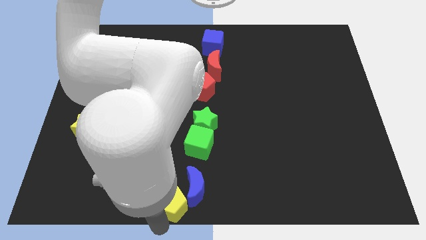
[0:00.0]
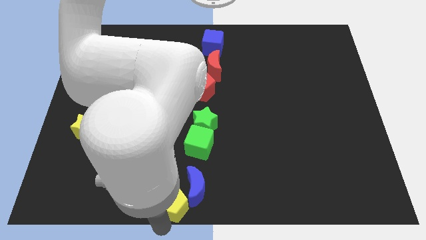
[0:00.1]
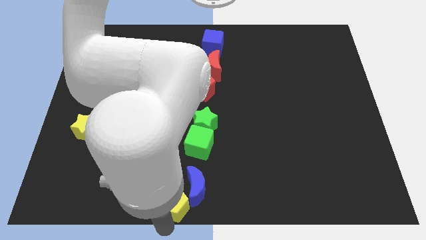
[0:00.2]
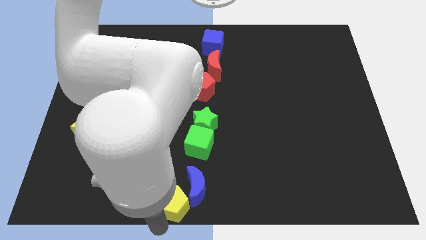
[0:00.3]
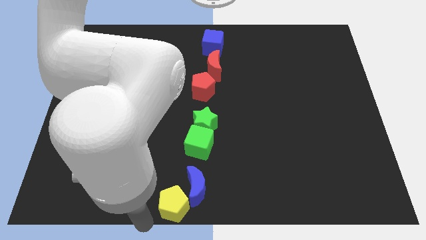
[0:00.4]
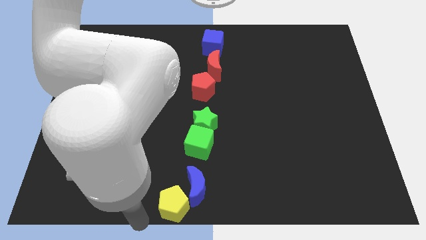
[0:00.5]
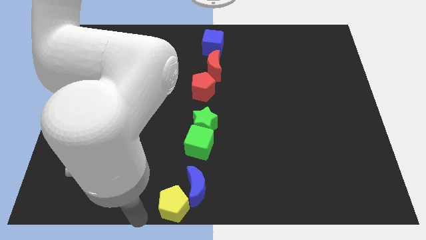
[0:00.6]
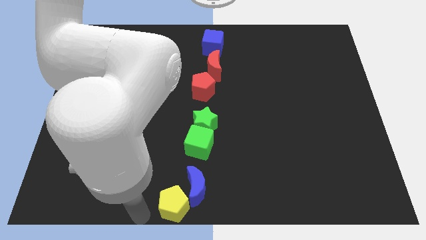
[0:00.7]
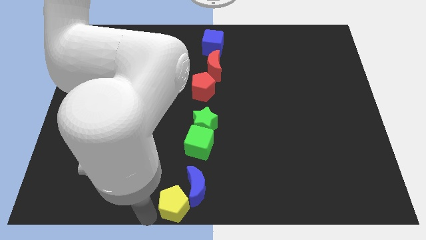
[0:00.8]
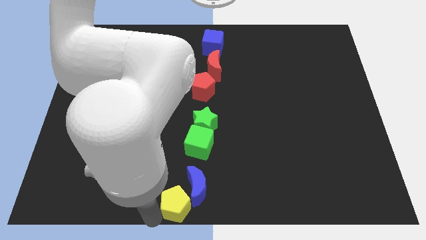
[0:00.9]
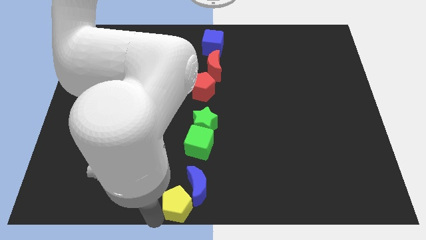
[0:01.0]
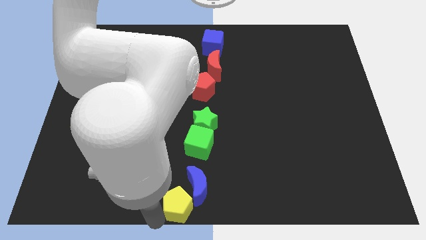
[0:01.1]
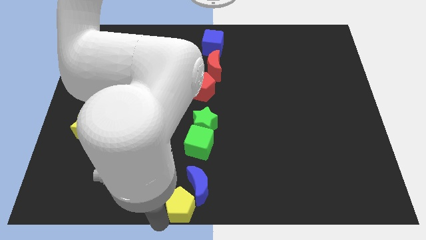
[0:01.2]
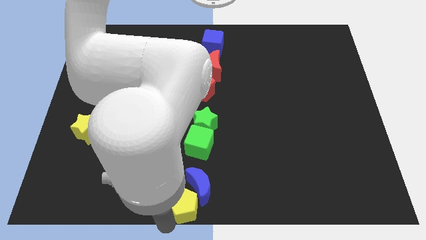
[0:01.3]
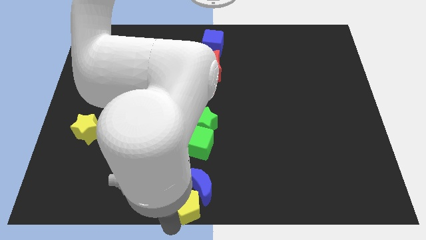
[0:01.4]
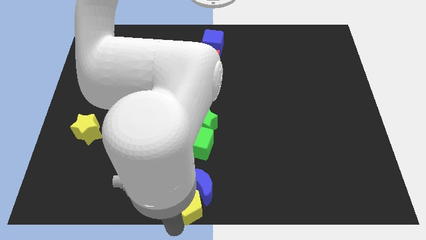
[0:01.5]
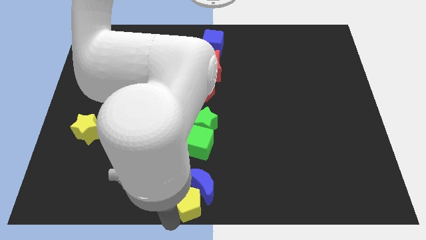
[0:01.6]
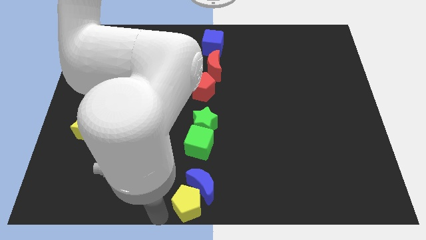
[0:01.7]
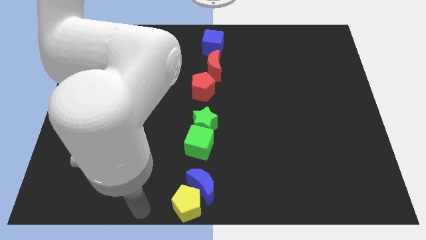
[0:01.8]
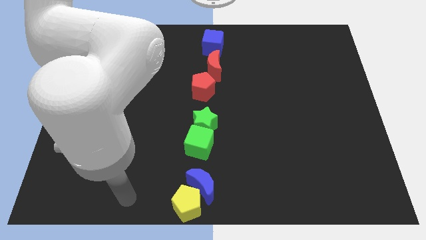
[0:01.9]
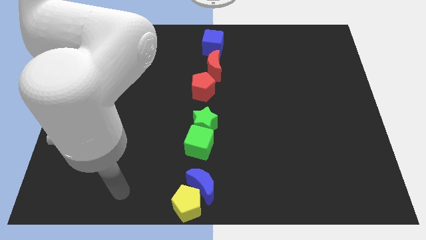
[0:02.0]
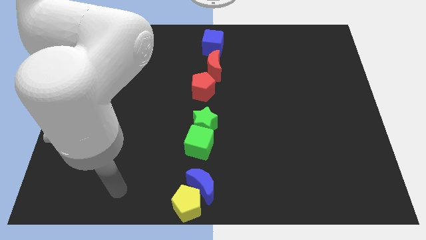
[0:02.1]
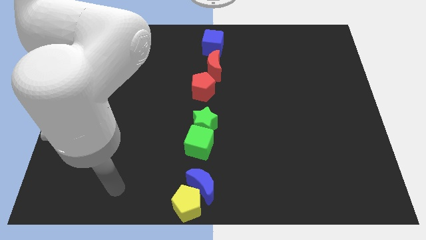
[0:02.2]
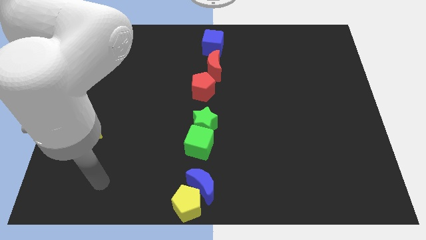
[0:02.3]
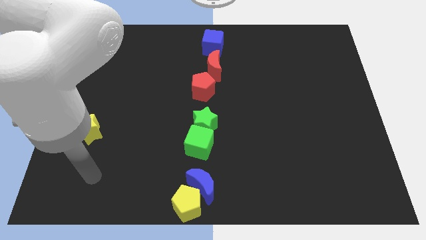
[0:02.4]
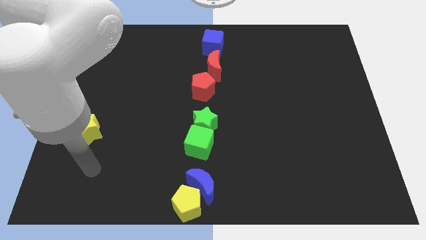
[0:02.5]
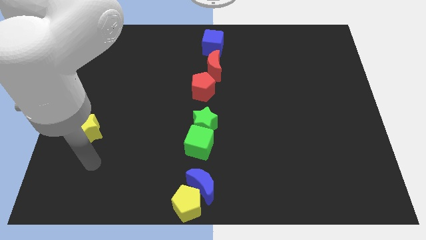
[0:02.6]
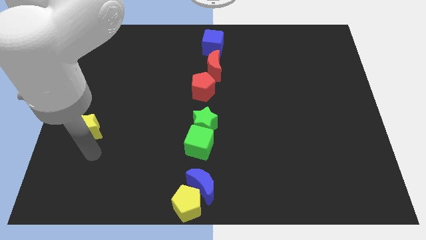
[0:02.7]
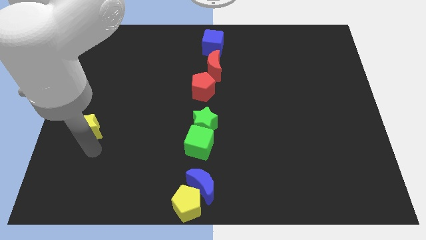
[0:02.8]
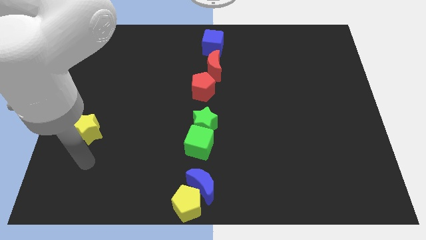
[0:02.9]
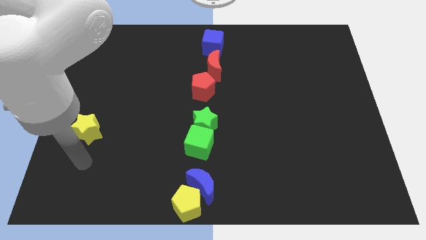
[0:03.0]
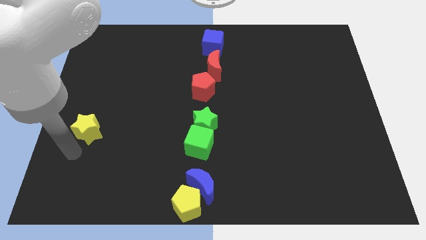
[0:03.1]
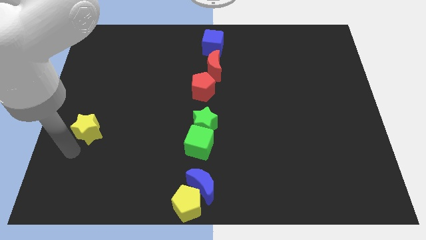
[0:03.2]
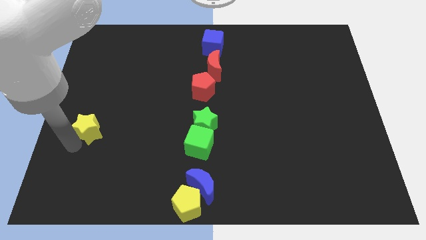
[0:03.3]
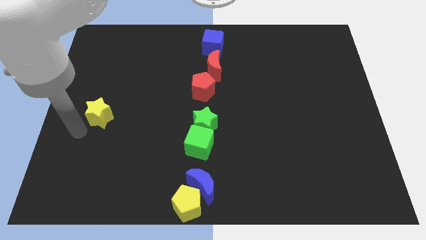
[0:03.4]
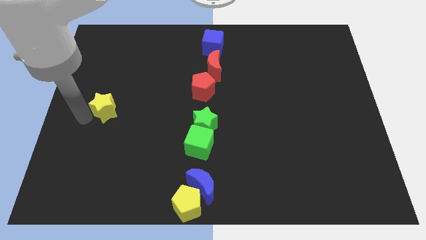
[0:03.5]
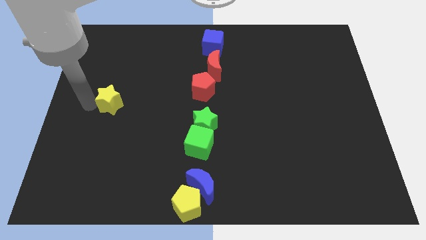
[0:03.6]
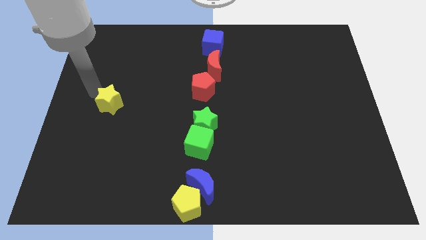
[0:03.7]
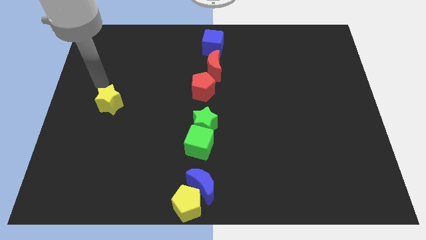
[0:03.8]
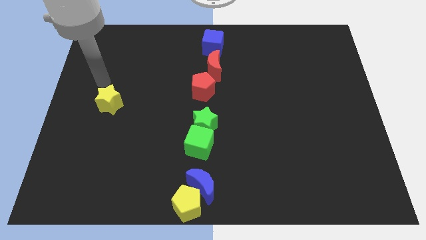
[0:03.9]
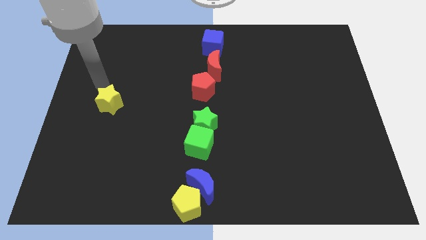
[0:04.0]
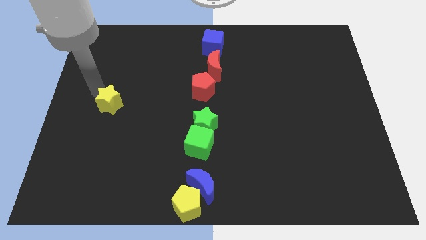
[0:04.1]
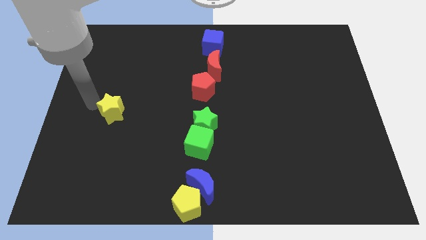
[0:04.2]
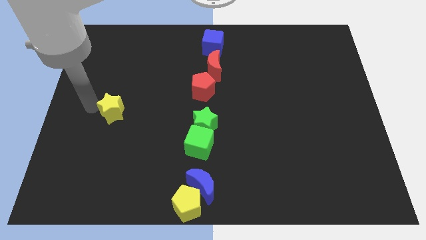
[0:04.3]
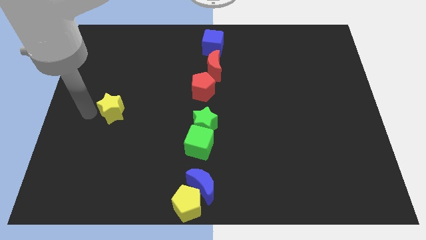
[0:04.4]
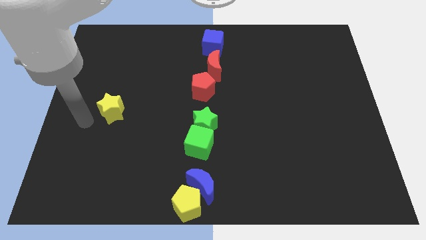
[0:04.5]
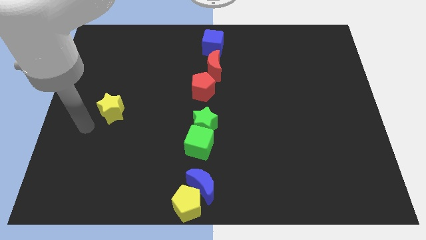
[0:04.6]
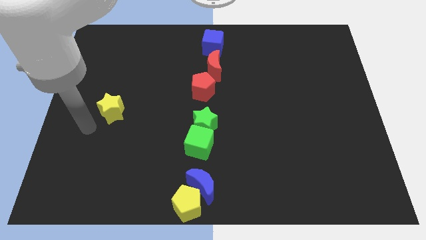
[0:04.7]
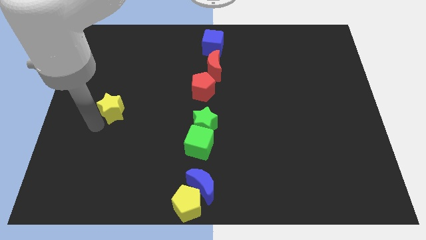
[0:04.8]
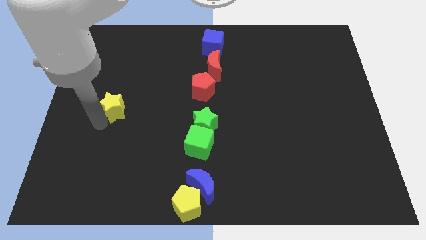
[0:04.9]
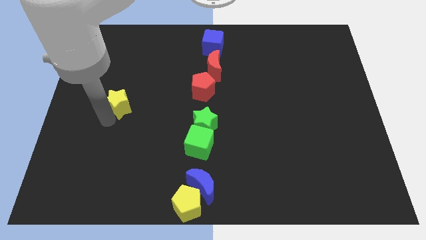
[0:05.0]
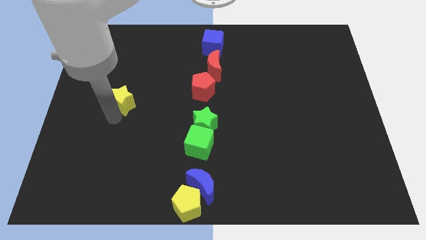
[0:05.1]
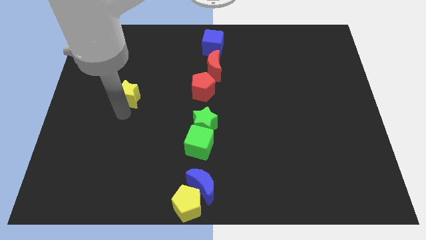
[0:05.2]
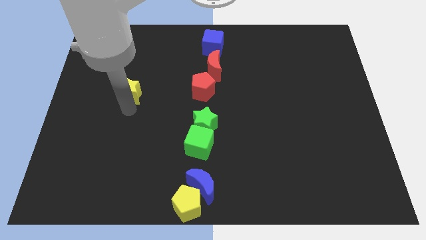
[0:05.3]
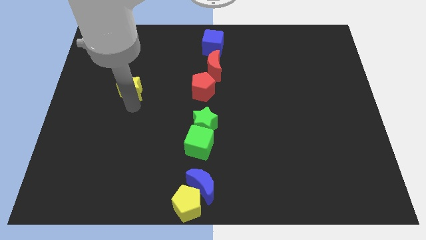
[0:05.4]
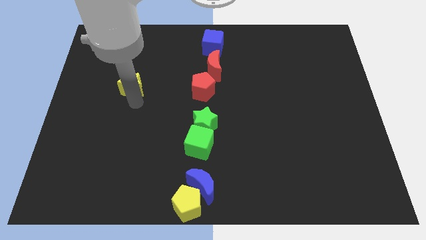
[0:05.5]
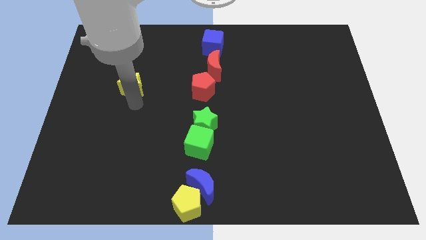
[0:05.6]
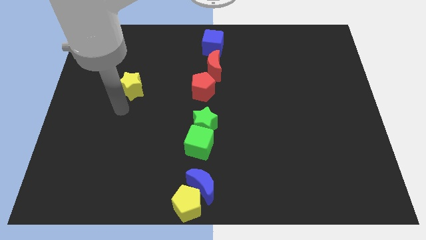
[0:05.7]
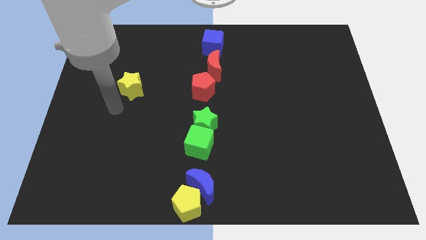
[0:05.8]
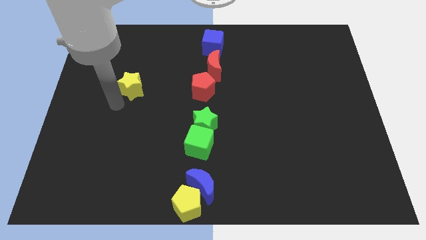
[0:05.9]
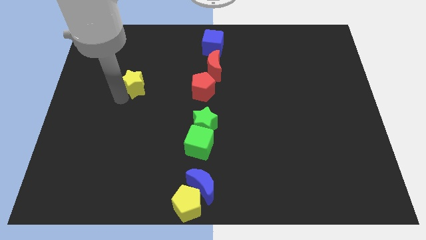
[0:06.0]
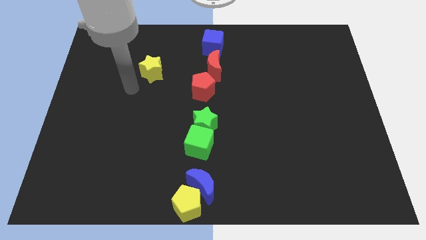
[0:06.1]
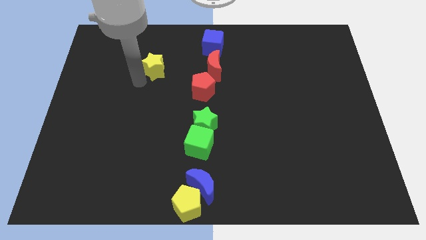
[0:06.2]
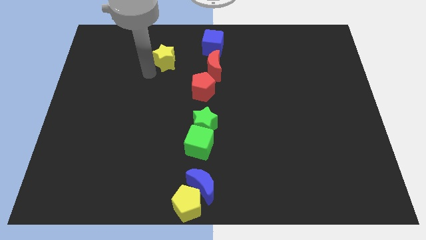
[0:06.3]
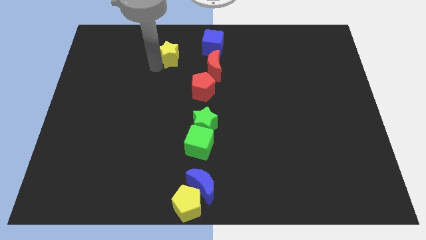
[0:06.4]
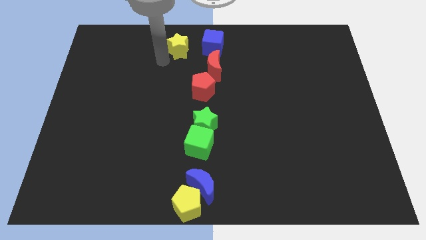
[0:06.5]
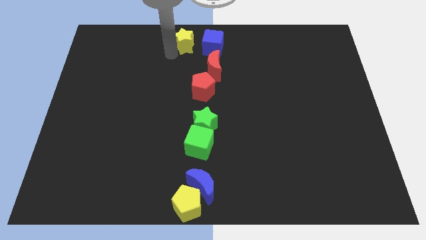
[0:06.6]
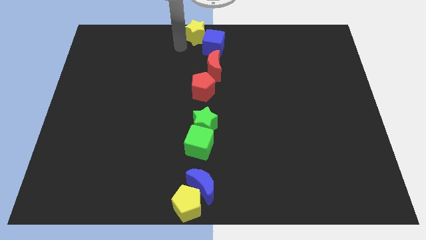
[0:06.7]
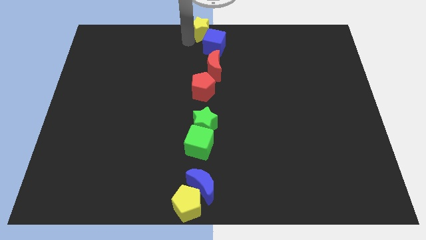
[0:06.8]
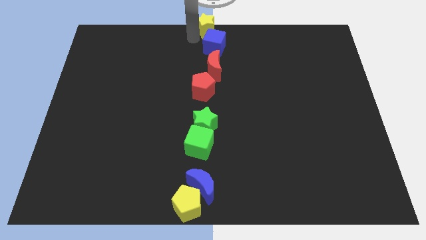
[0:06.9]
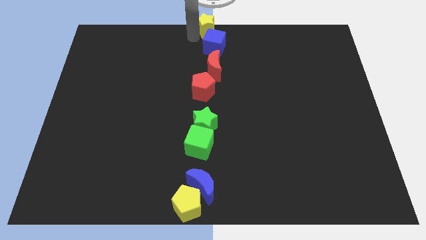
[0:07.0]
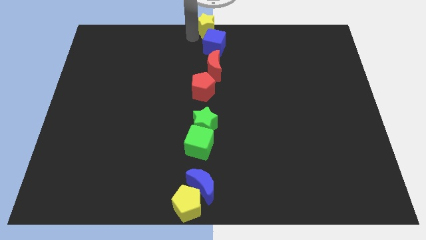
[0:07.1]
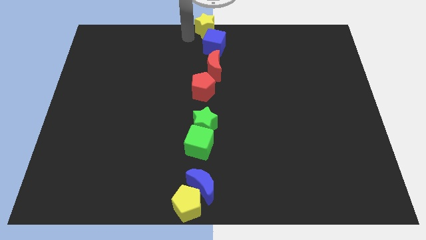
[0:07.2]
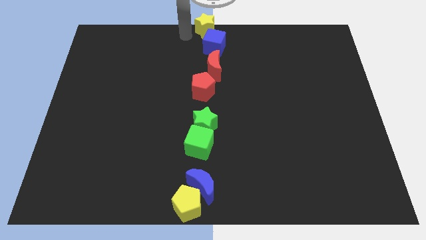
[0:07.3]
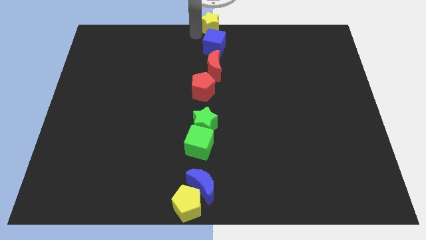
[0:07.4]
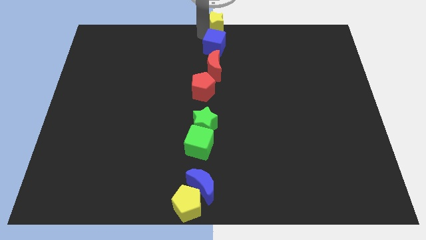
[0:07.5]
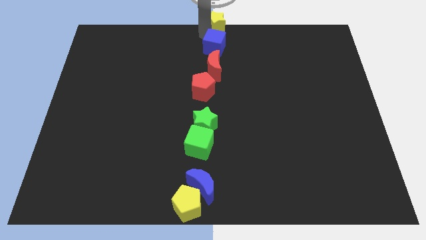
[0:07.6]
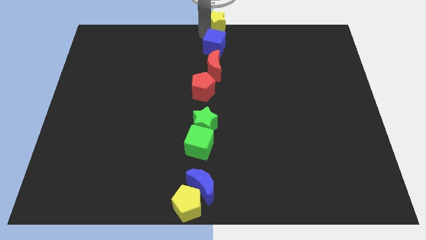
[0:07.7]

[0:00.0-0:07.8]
place yellow blocks at the top and bottom centers of the board

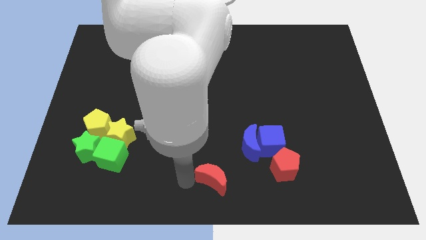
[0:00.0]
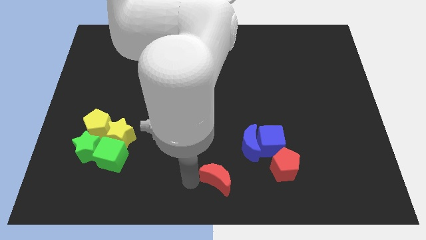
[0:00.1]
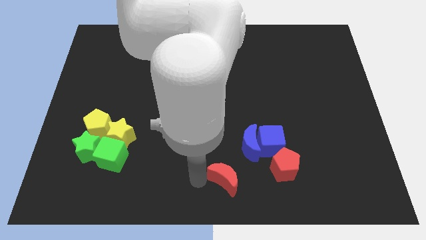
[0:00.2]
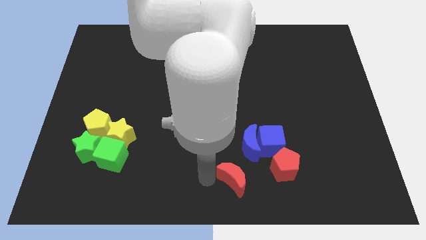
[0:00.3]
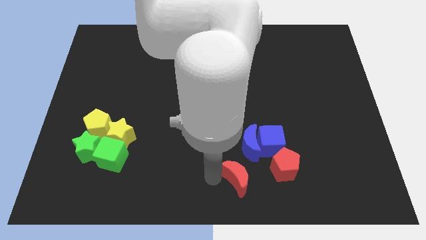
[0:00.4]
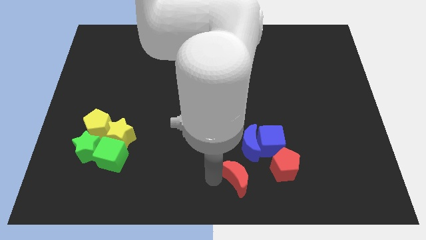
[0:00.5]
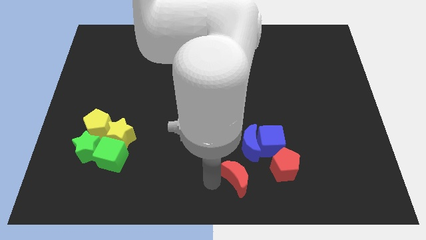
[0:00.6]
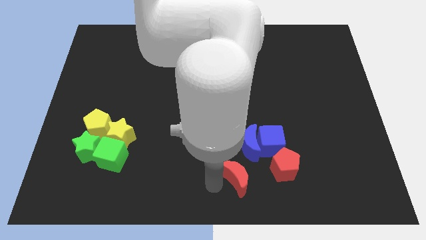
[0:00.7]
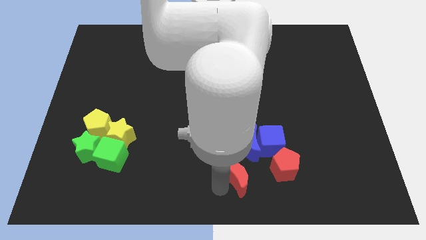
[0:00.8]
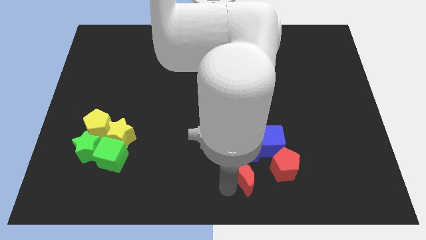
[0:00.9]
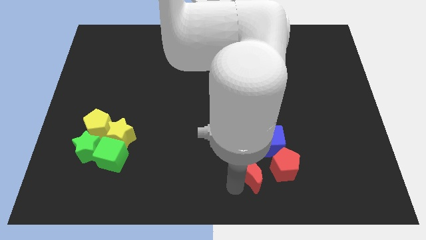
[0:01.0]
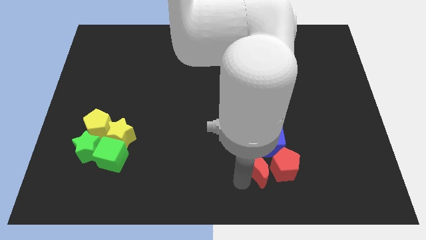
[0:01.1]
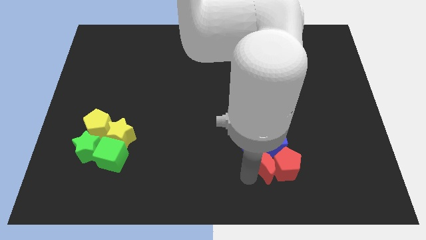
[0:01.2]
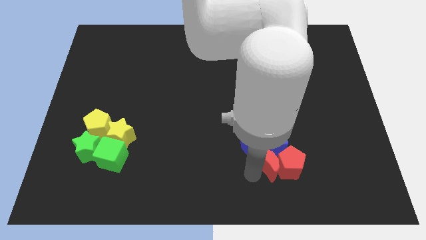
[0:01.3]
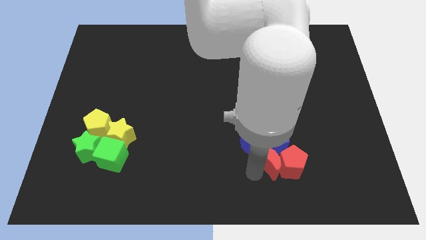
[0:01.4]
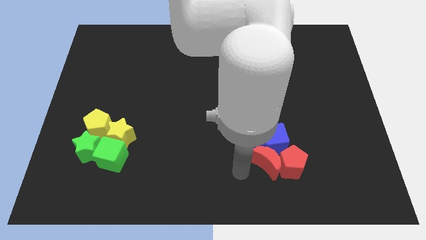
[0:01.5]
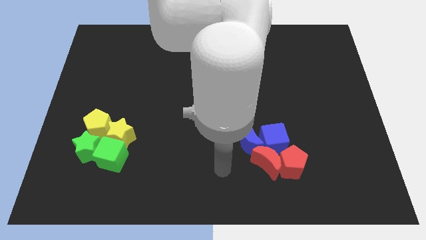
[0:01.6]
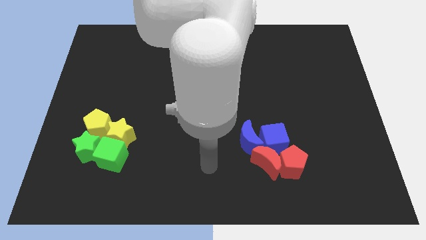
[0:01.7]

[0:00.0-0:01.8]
make a group of red and blue blocks
